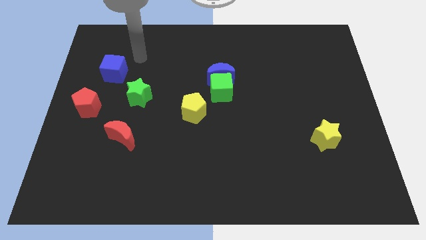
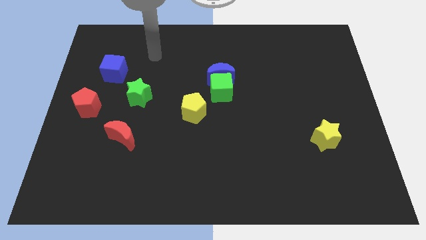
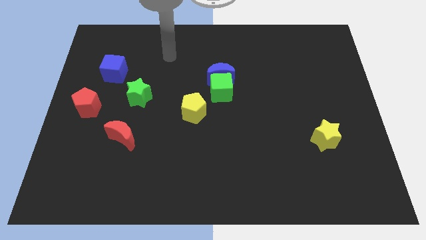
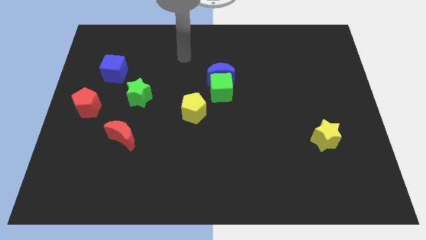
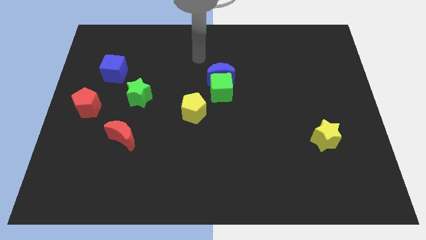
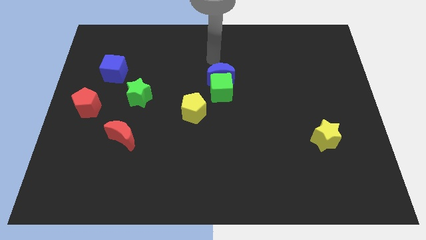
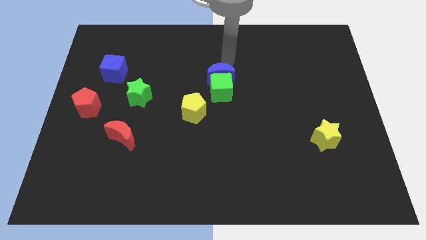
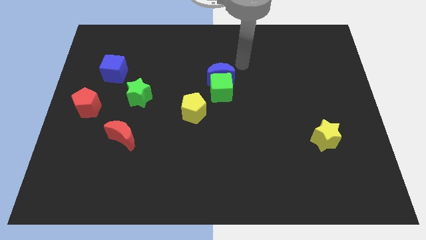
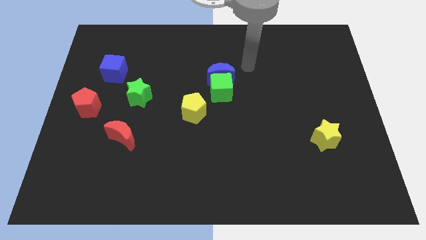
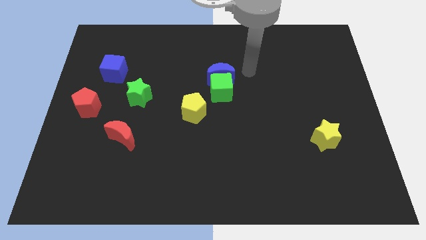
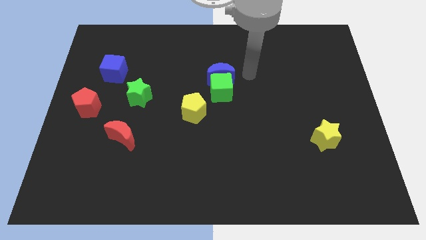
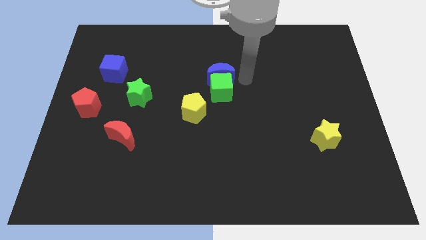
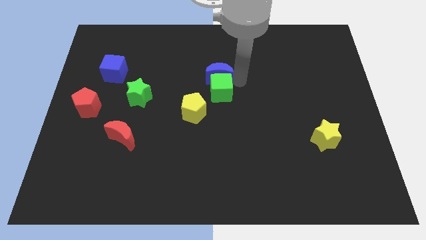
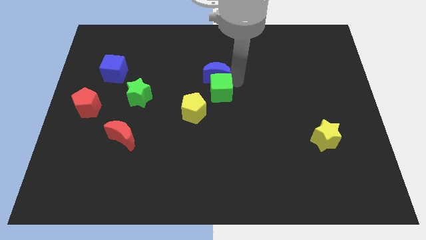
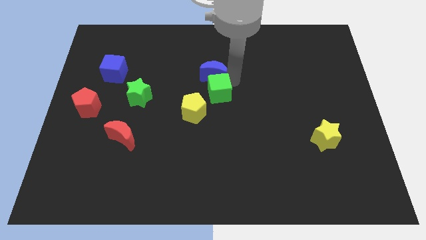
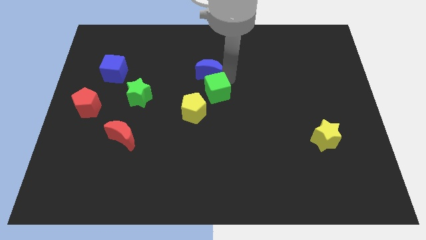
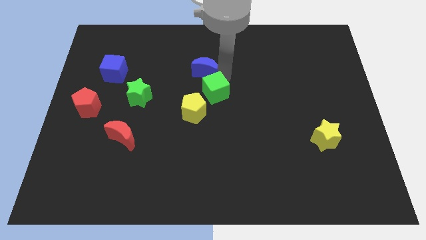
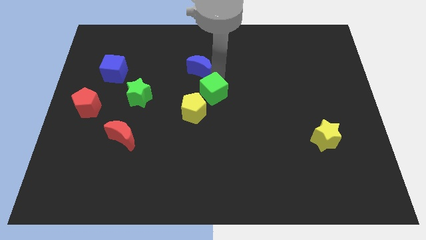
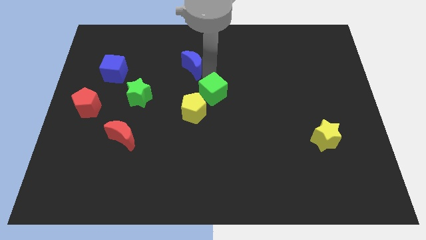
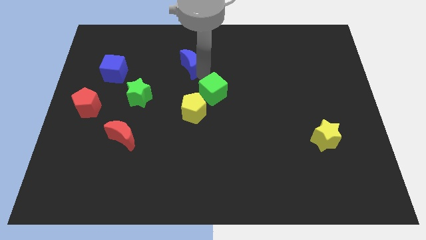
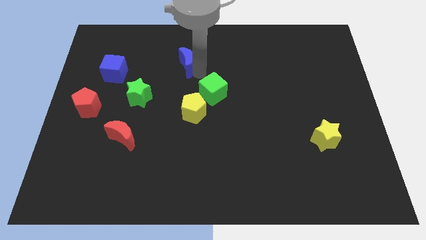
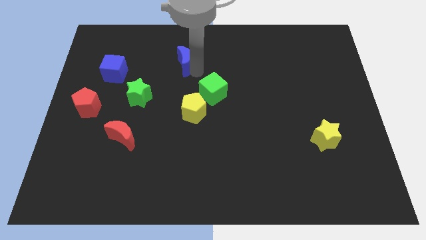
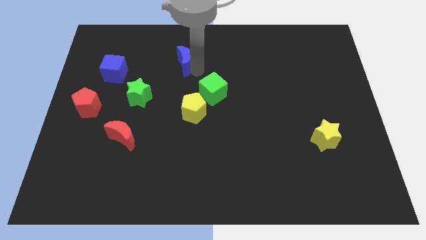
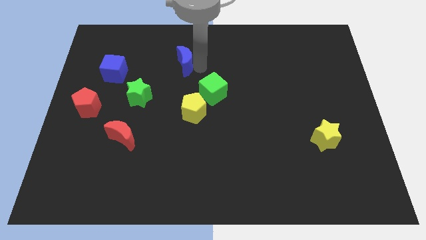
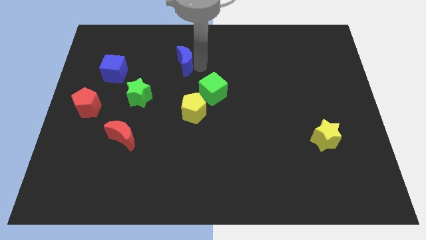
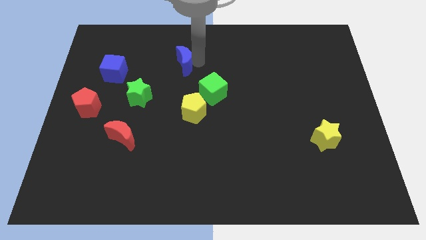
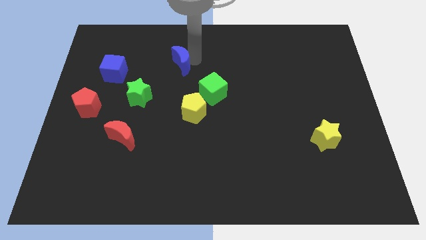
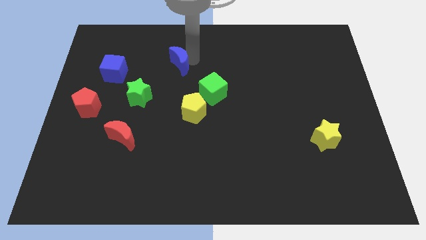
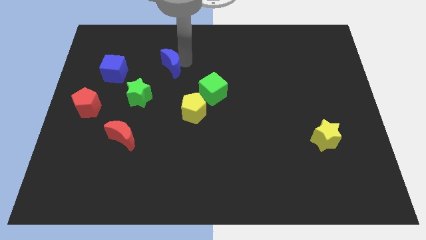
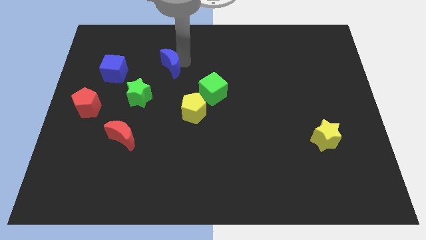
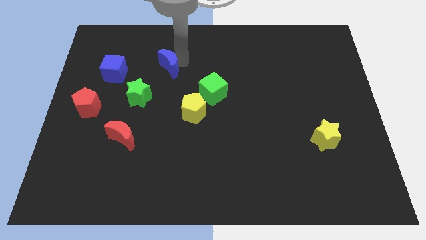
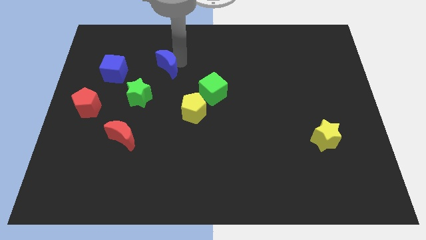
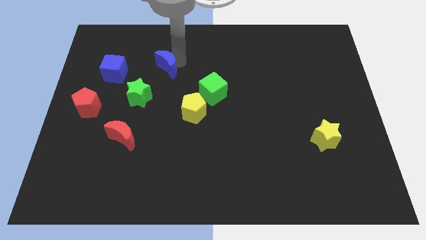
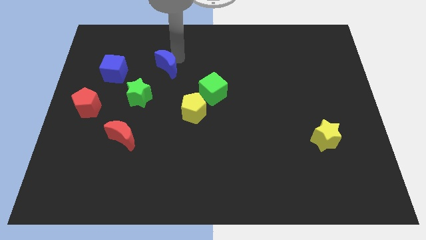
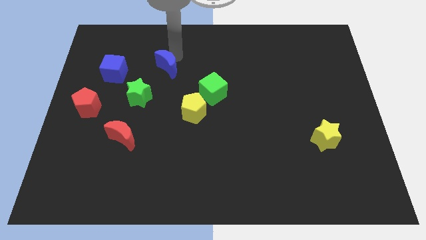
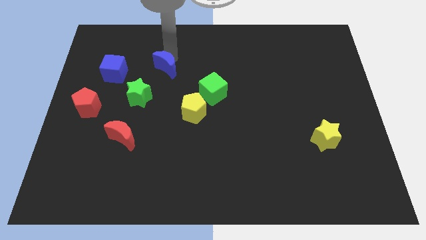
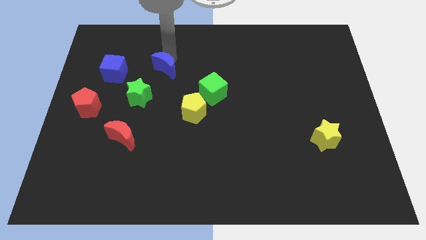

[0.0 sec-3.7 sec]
separate the green cube and the blue crescent

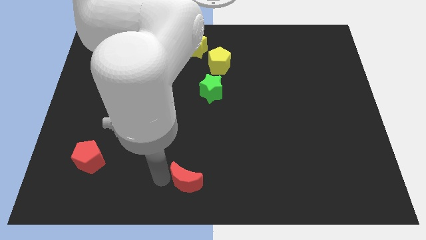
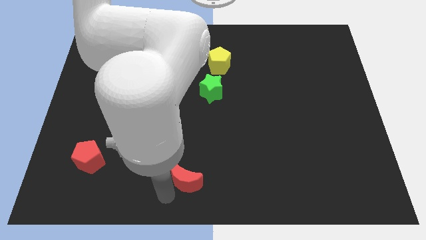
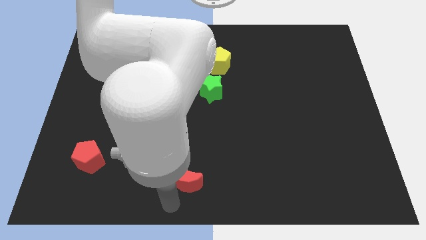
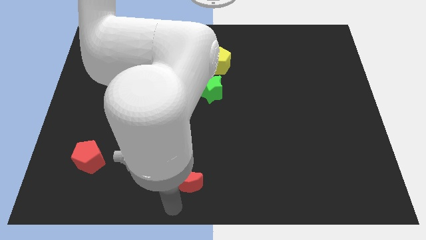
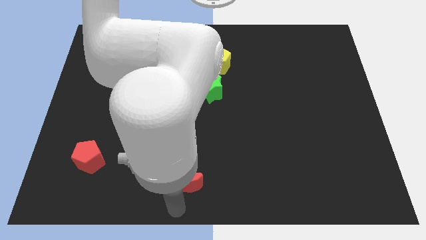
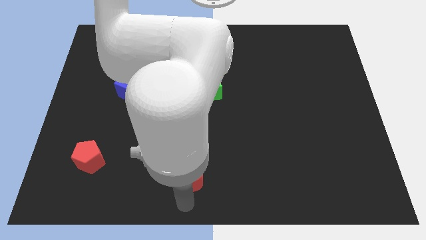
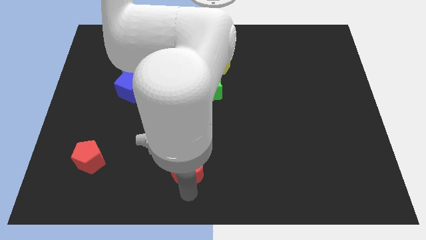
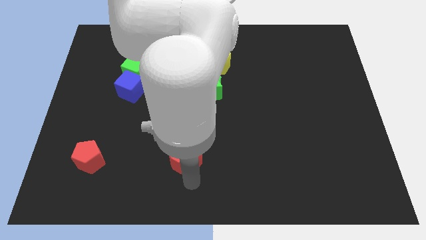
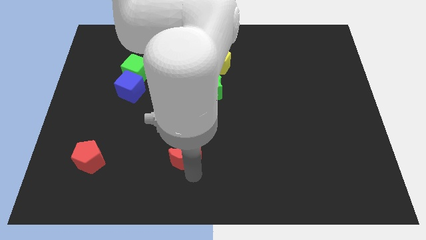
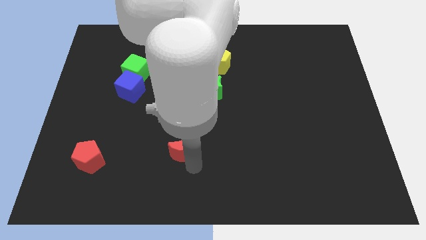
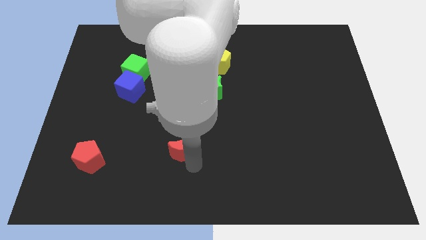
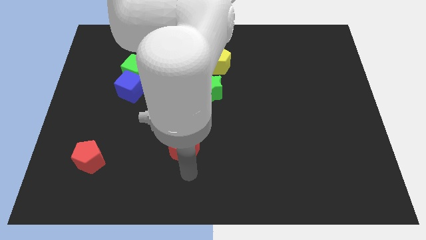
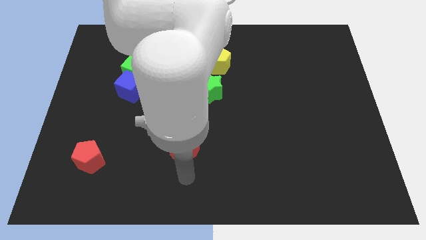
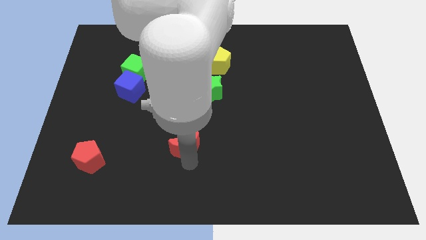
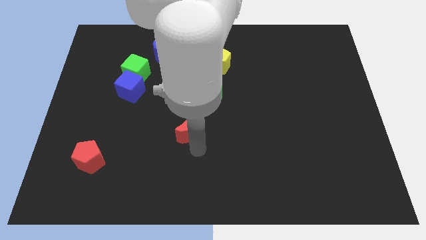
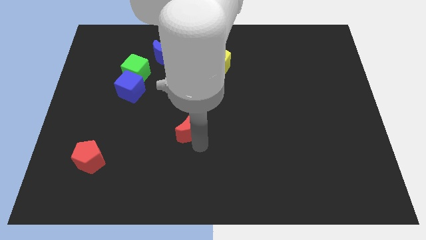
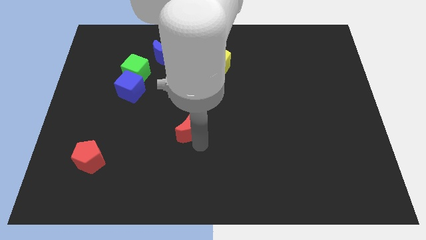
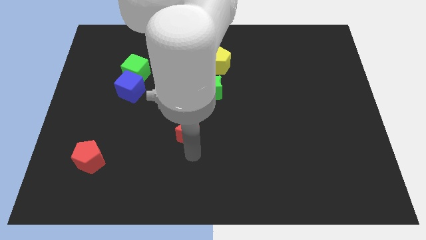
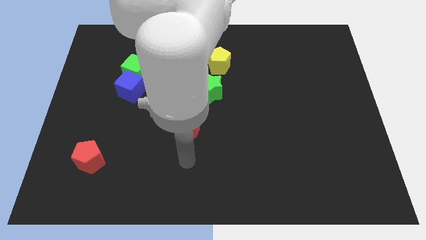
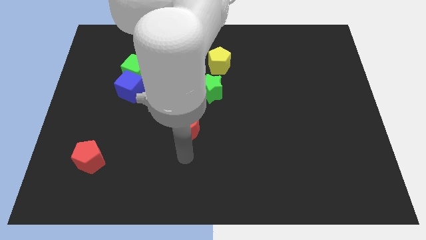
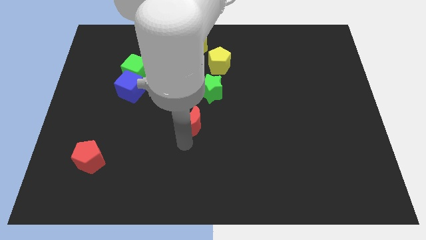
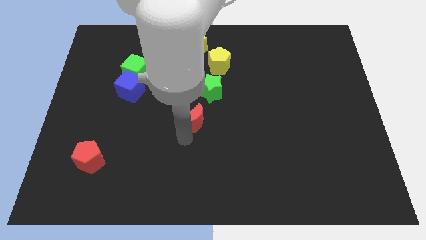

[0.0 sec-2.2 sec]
put the red moon diagonally top right to the red pentagon

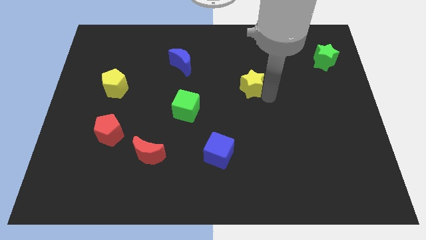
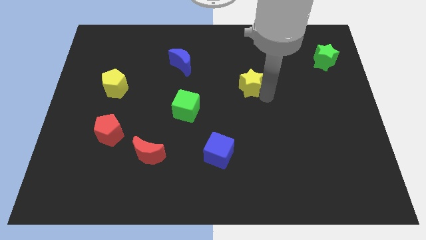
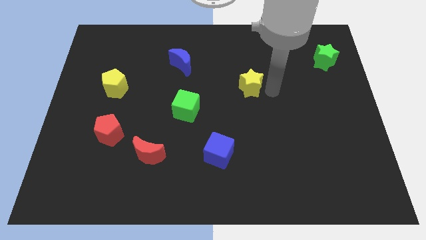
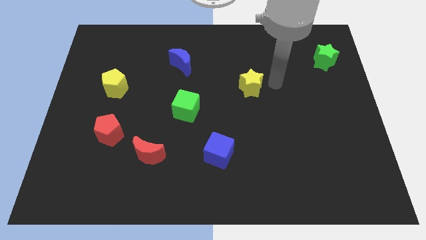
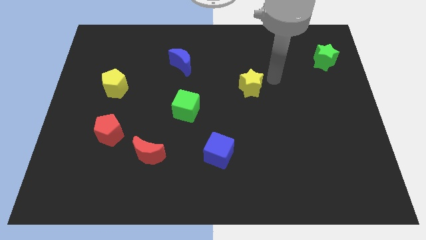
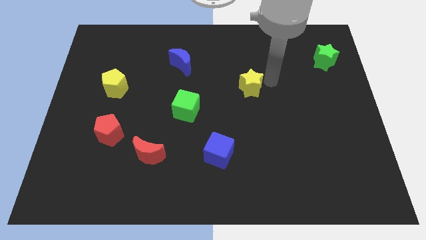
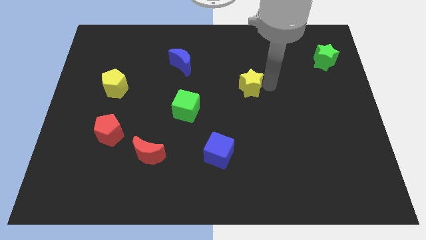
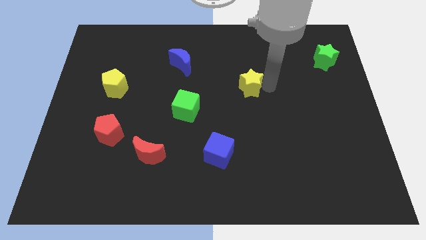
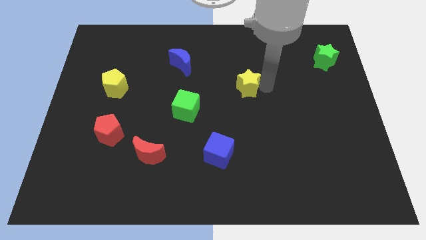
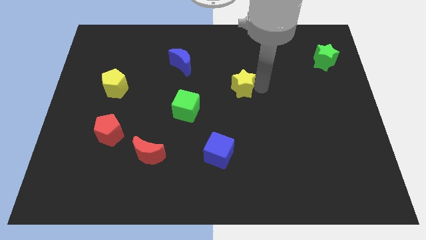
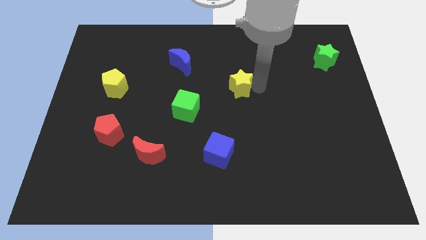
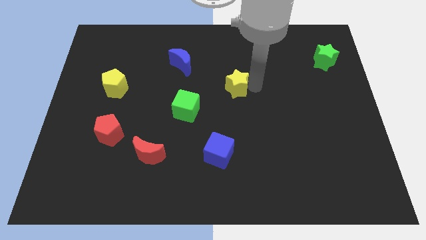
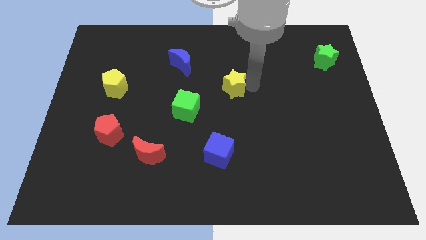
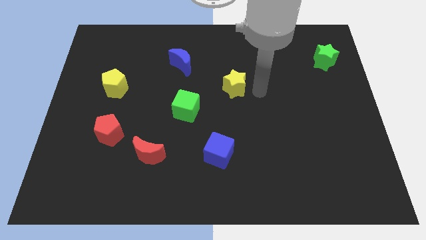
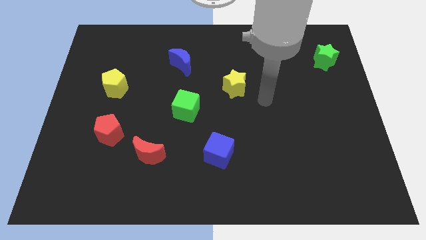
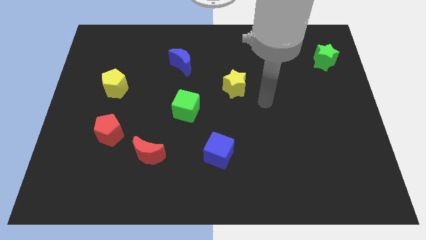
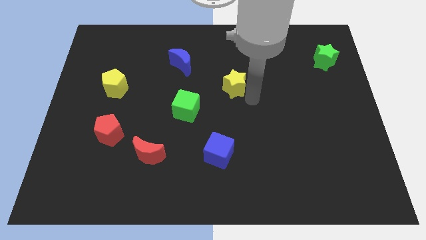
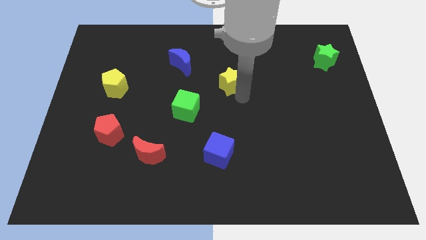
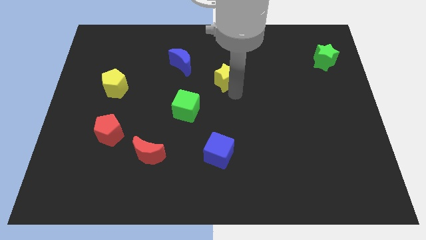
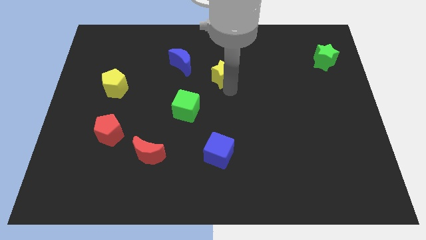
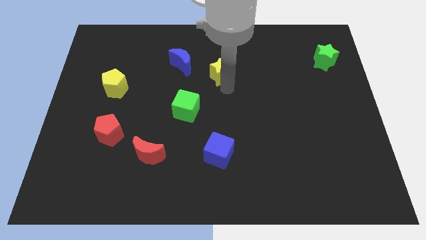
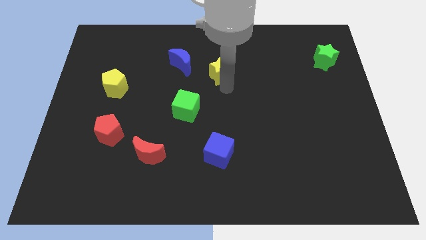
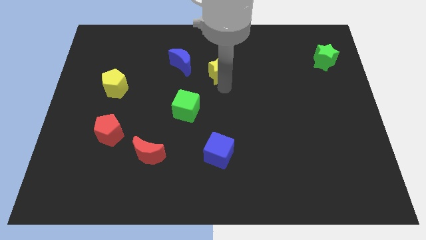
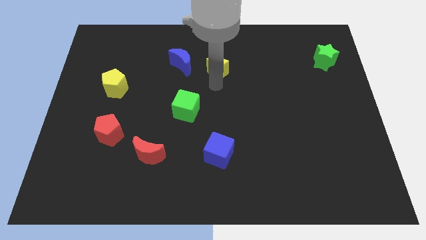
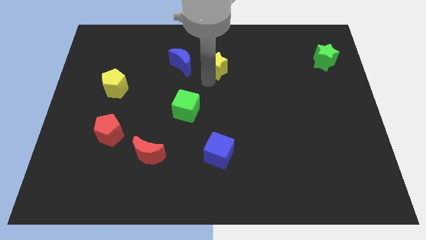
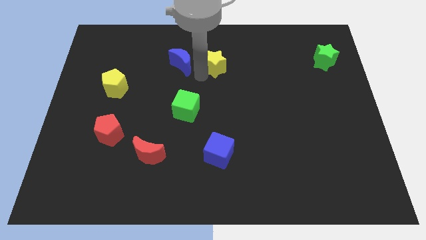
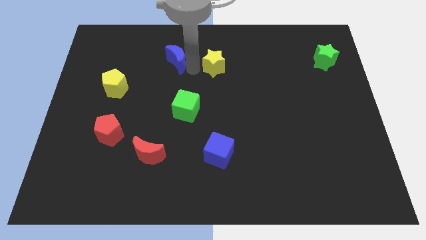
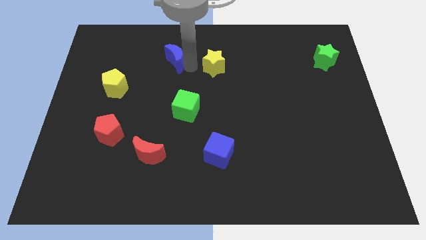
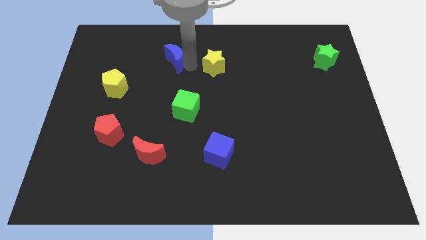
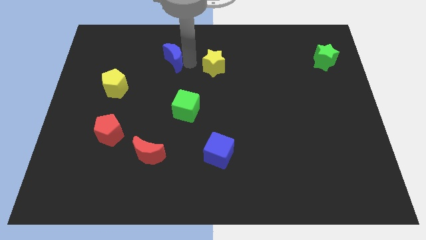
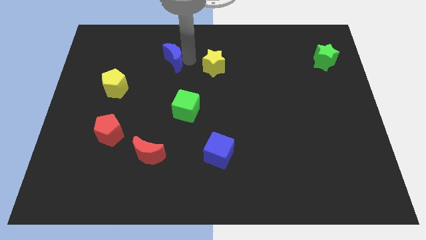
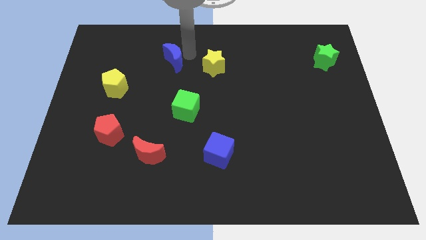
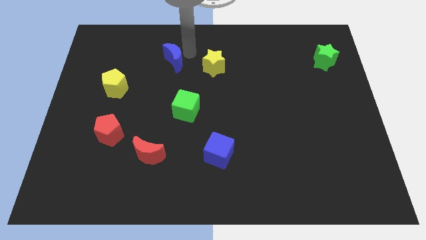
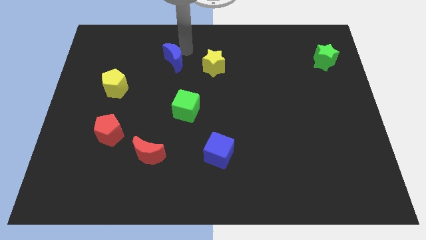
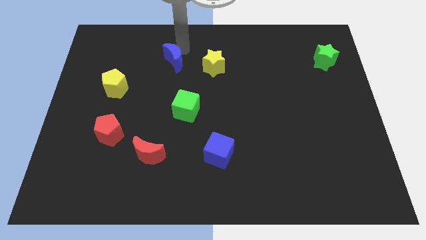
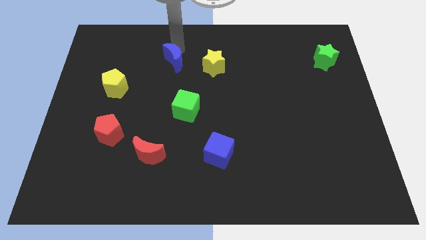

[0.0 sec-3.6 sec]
push the yellow star to the top
